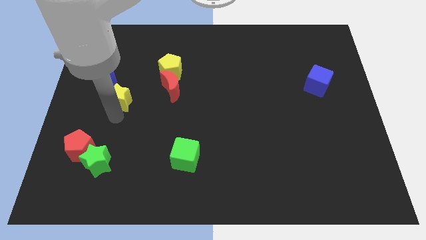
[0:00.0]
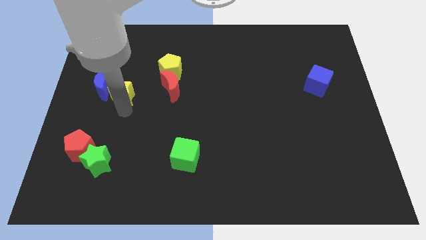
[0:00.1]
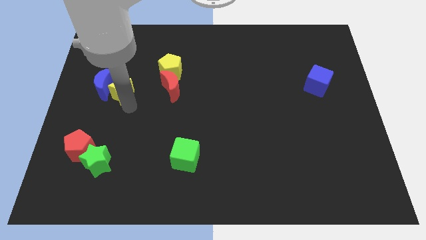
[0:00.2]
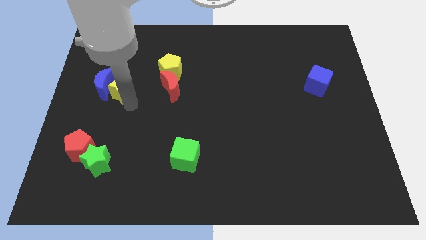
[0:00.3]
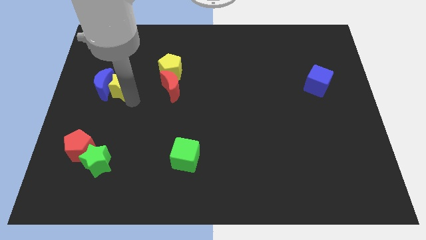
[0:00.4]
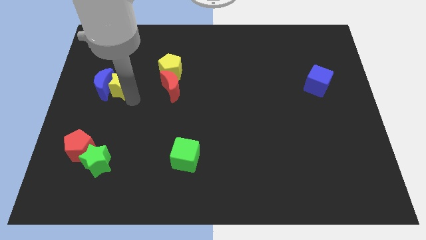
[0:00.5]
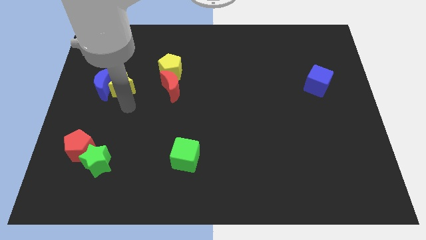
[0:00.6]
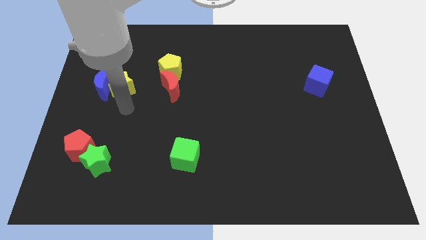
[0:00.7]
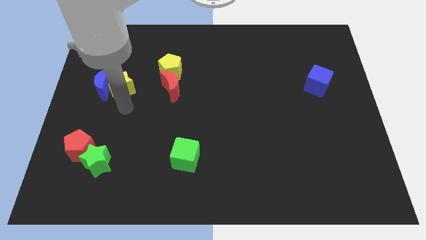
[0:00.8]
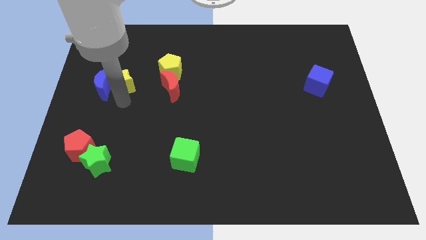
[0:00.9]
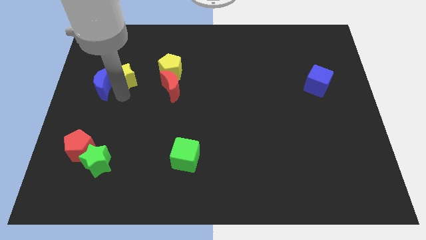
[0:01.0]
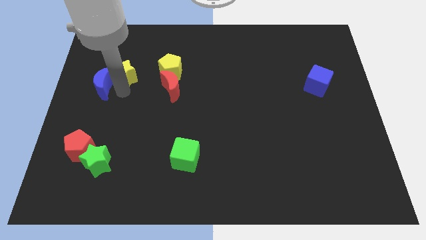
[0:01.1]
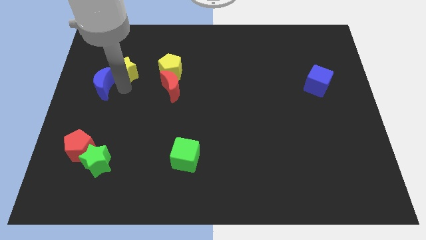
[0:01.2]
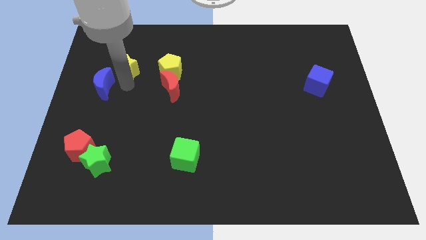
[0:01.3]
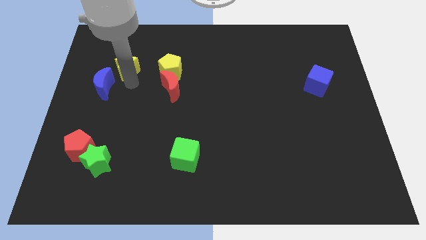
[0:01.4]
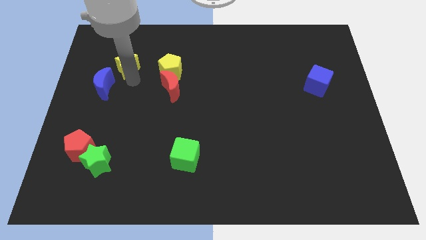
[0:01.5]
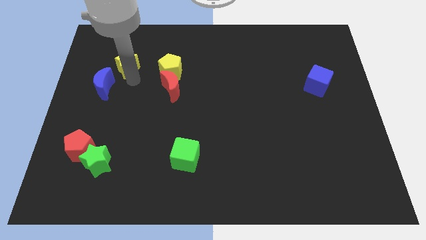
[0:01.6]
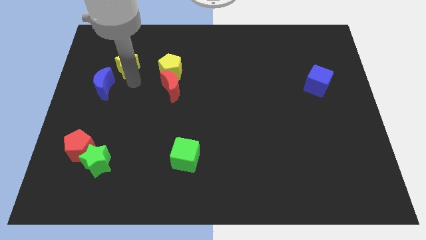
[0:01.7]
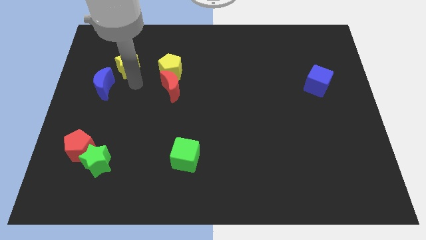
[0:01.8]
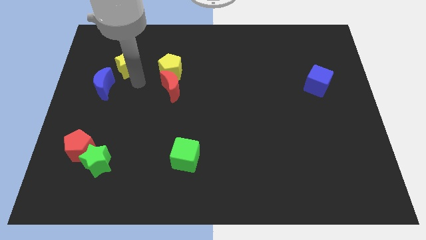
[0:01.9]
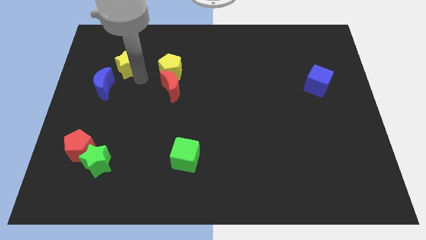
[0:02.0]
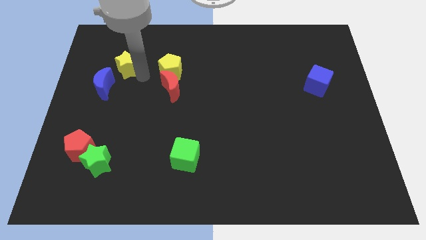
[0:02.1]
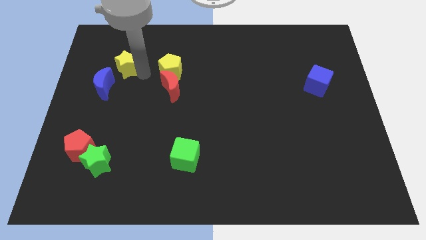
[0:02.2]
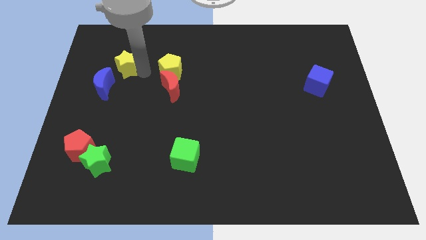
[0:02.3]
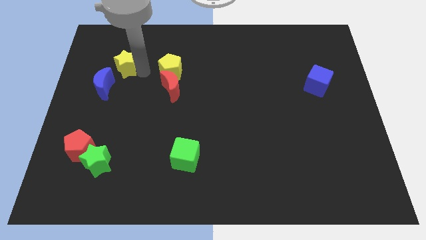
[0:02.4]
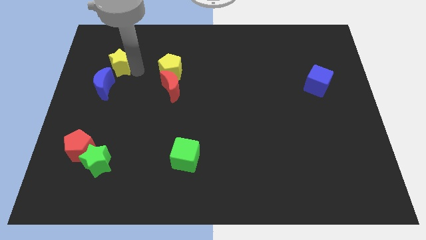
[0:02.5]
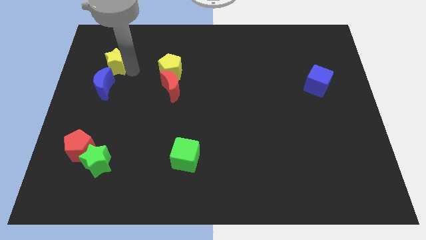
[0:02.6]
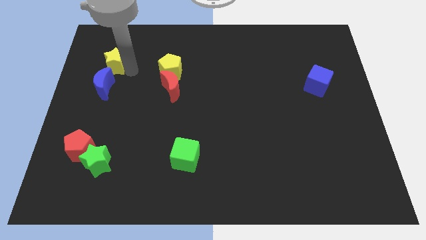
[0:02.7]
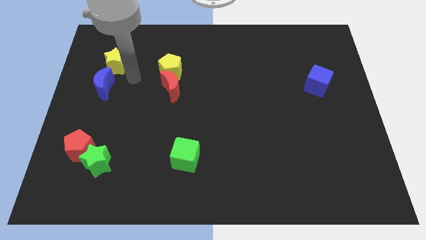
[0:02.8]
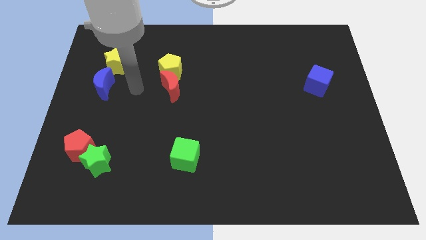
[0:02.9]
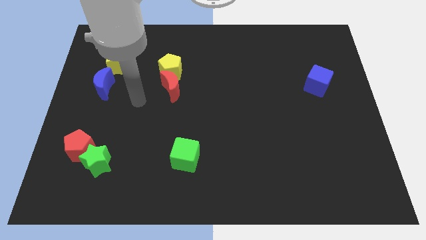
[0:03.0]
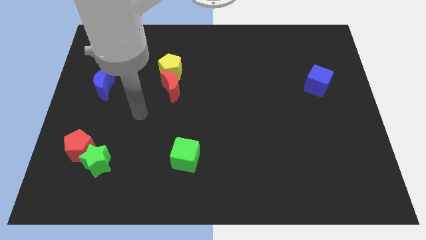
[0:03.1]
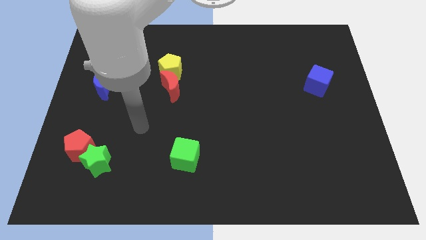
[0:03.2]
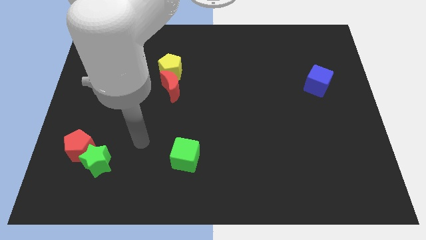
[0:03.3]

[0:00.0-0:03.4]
place yellow star to the top of the blue moon

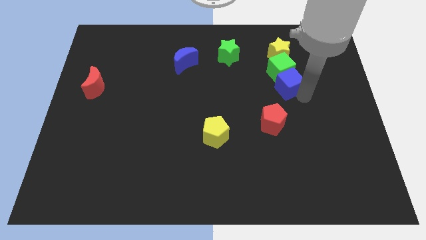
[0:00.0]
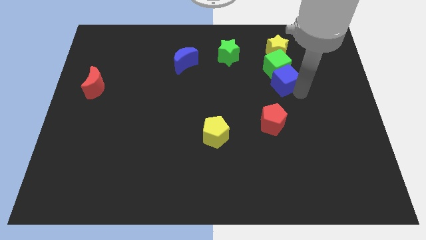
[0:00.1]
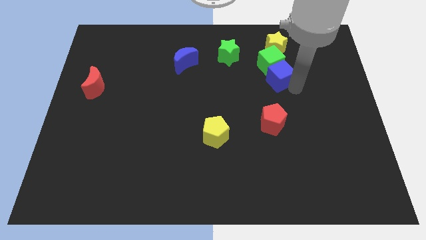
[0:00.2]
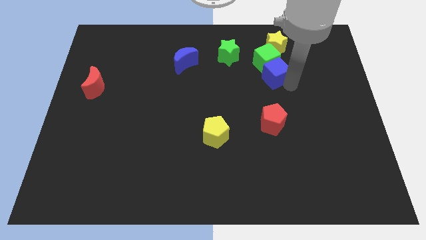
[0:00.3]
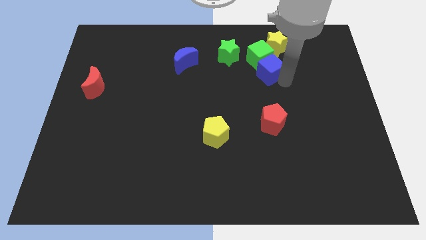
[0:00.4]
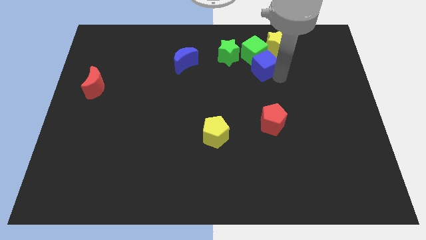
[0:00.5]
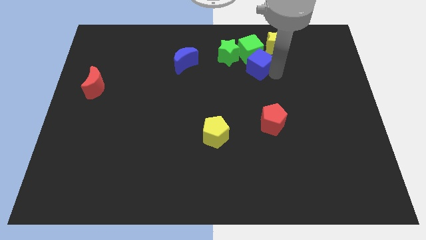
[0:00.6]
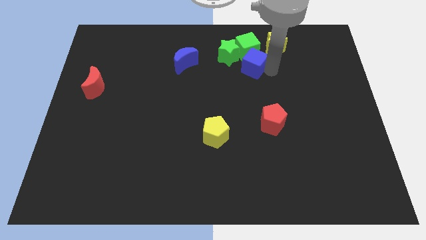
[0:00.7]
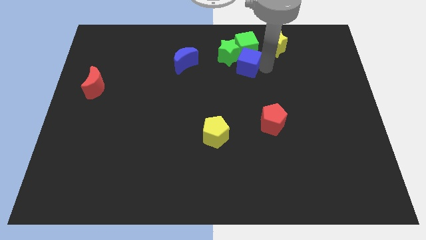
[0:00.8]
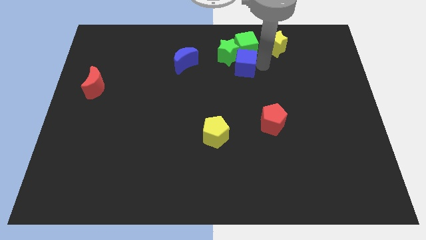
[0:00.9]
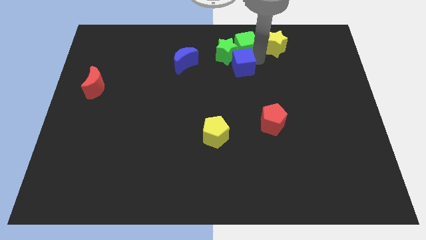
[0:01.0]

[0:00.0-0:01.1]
push the blue cube along with the green cube towards the top center

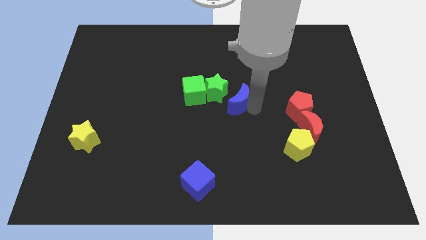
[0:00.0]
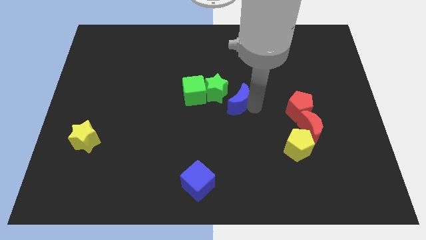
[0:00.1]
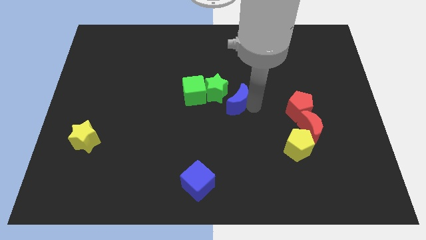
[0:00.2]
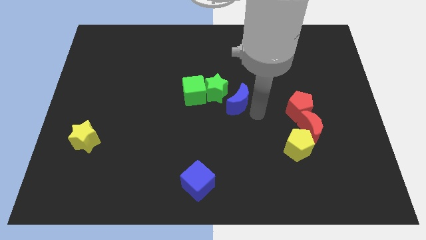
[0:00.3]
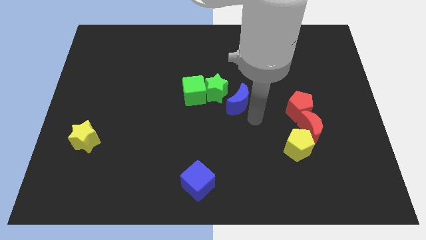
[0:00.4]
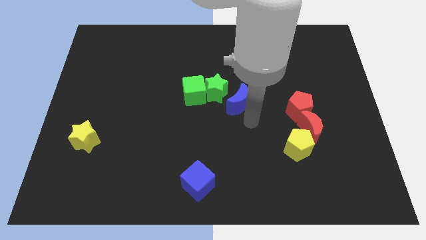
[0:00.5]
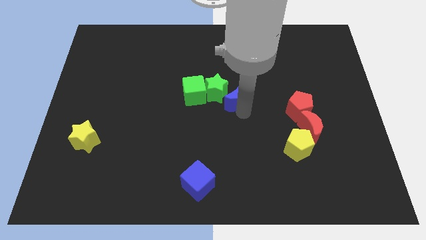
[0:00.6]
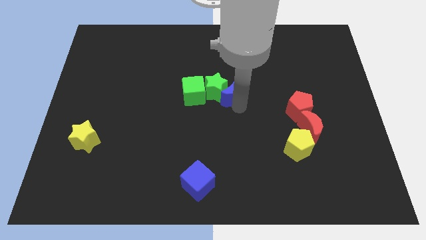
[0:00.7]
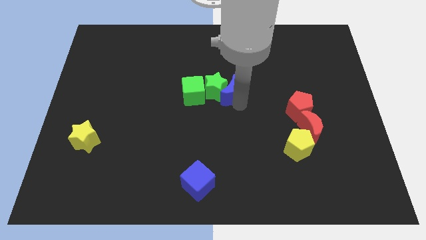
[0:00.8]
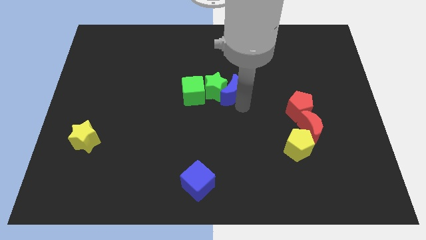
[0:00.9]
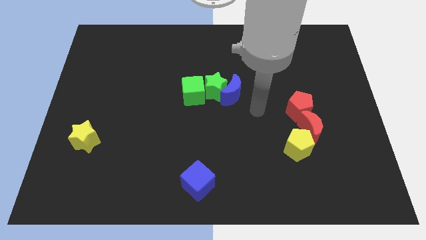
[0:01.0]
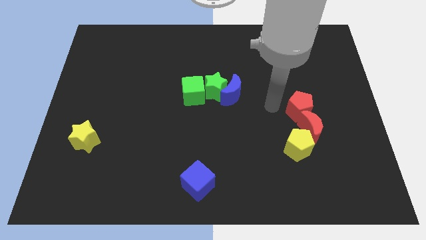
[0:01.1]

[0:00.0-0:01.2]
move the blue moon into the green star

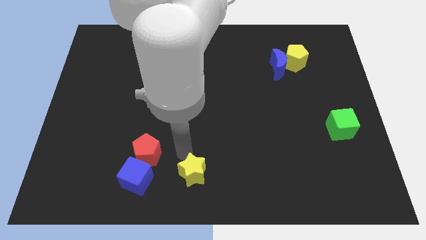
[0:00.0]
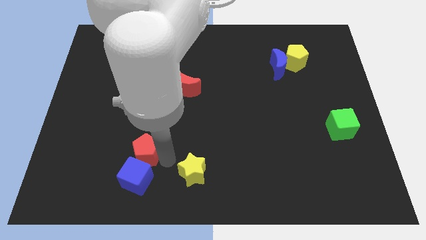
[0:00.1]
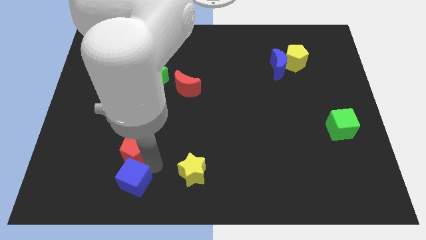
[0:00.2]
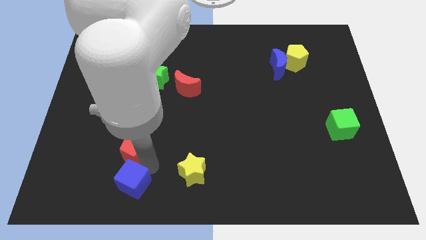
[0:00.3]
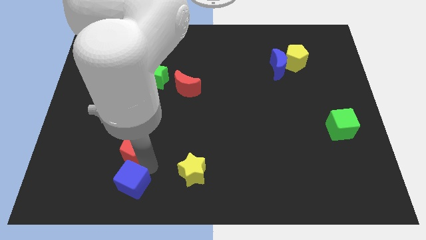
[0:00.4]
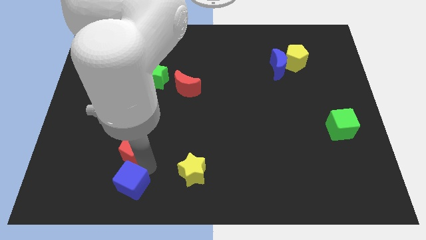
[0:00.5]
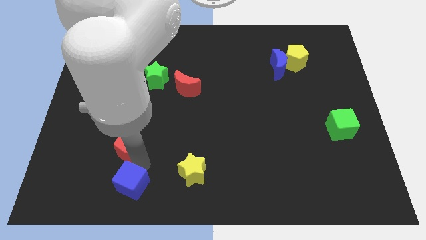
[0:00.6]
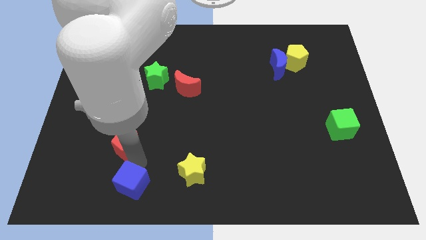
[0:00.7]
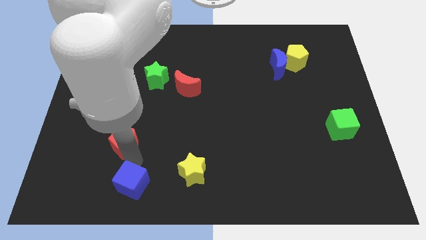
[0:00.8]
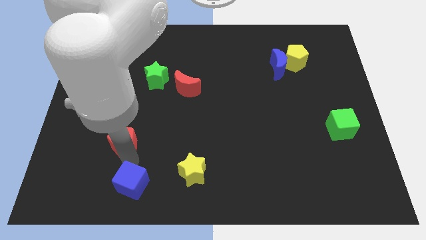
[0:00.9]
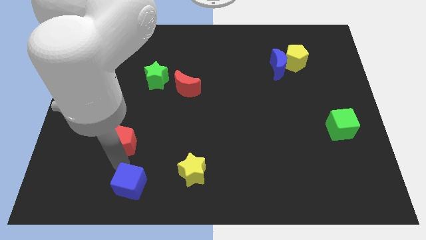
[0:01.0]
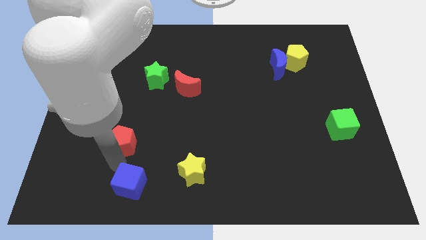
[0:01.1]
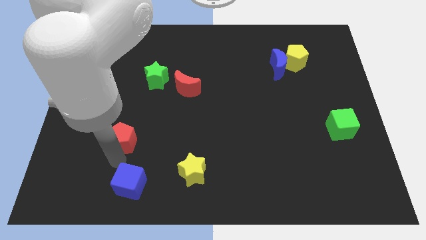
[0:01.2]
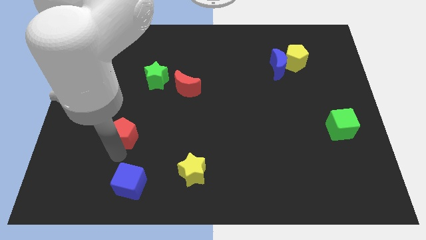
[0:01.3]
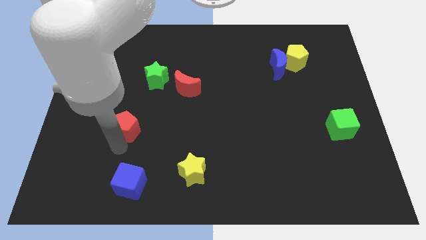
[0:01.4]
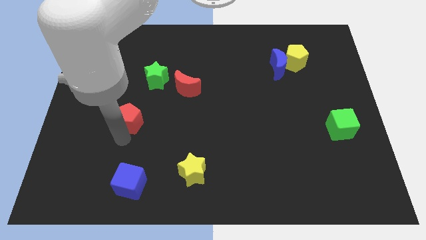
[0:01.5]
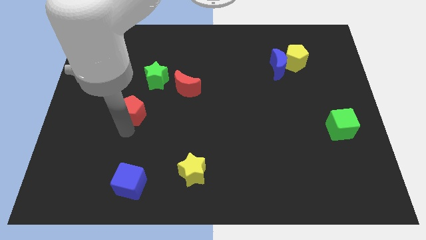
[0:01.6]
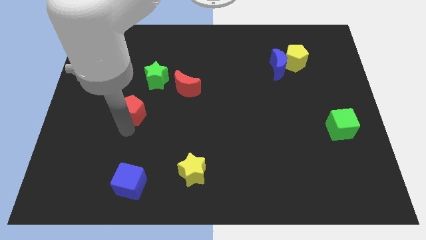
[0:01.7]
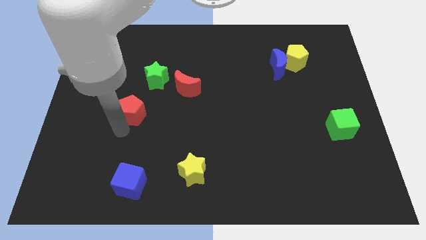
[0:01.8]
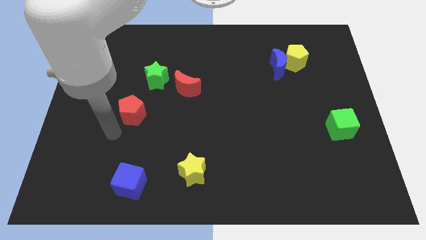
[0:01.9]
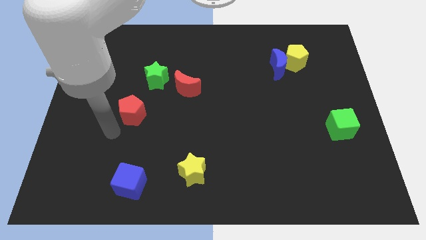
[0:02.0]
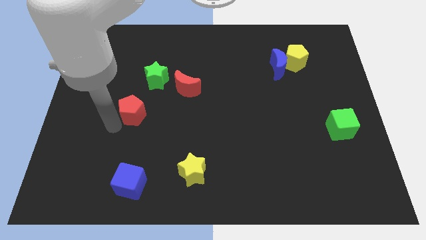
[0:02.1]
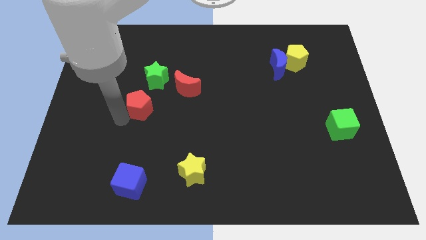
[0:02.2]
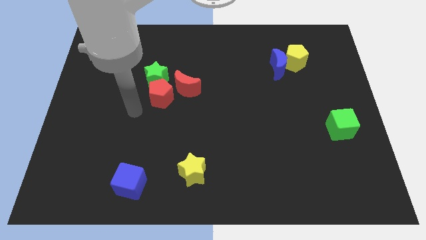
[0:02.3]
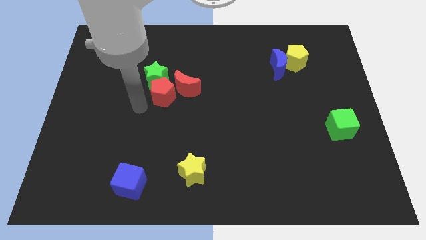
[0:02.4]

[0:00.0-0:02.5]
push the red pentagon towards the bottom of the green star

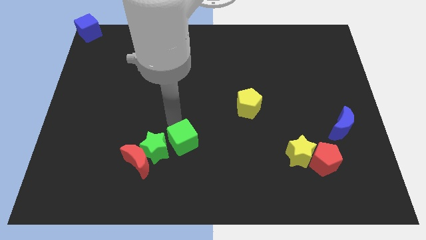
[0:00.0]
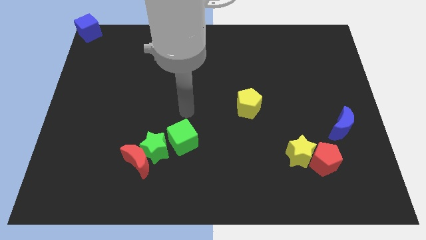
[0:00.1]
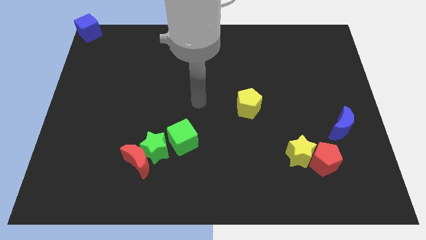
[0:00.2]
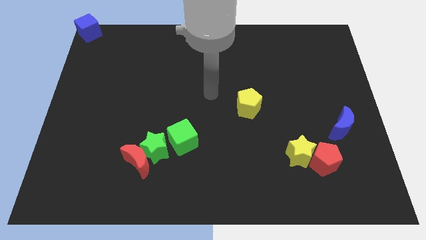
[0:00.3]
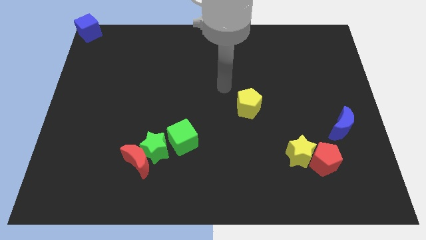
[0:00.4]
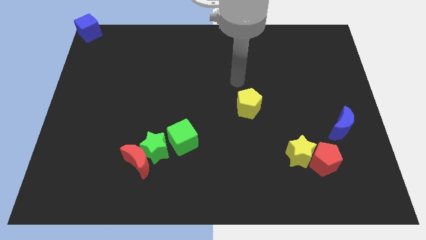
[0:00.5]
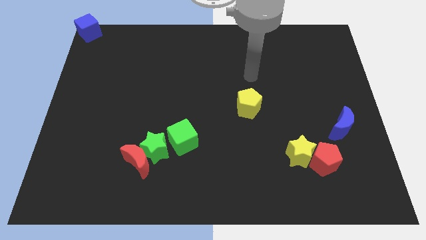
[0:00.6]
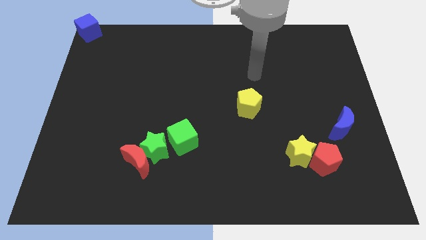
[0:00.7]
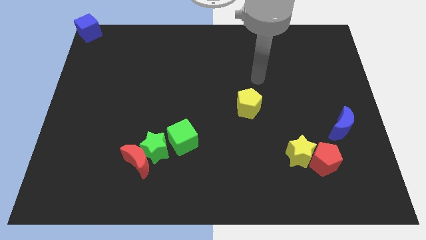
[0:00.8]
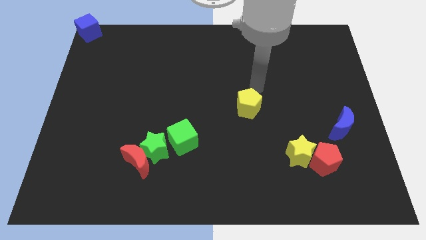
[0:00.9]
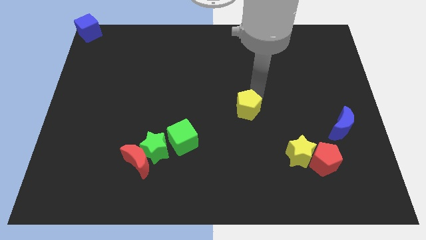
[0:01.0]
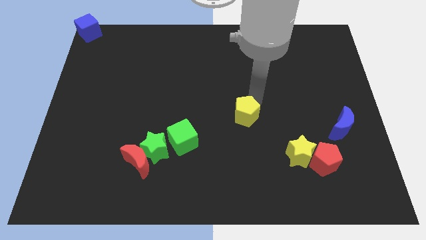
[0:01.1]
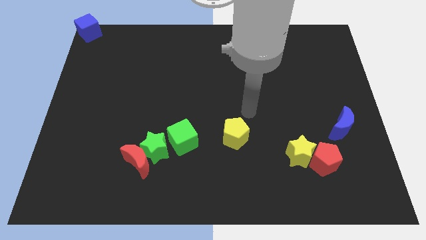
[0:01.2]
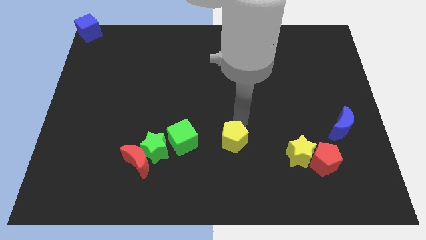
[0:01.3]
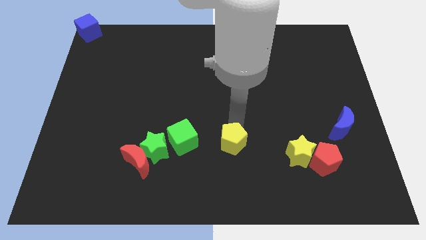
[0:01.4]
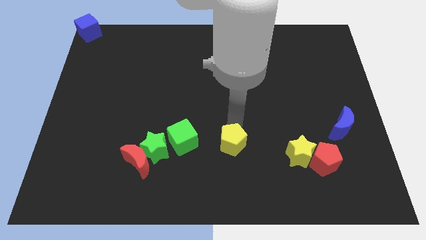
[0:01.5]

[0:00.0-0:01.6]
push the yellow pentagon downward
